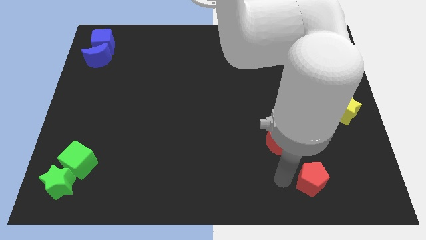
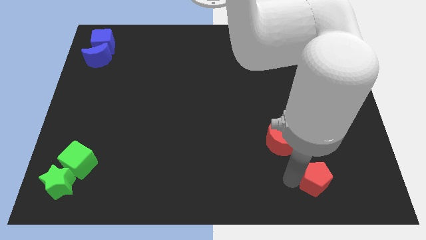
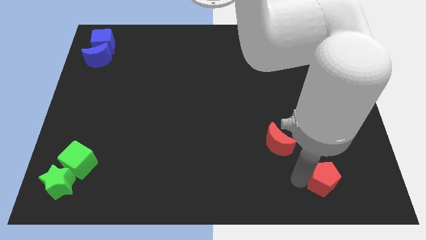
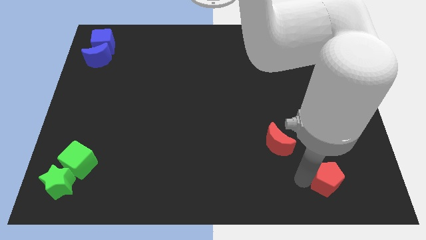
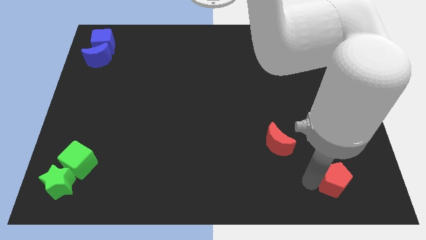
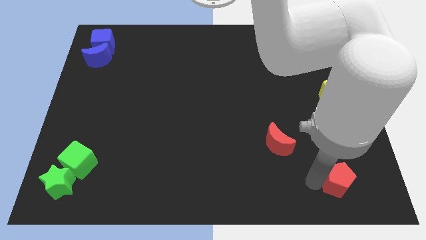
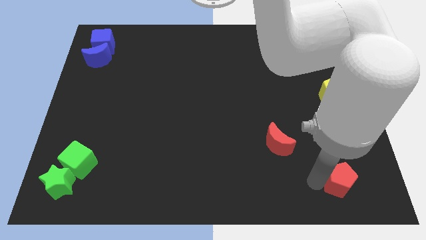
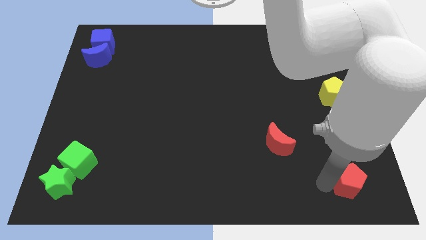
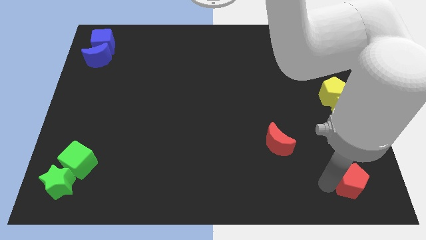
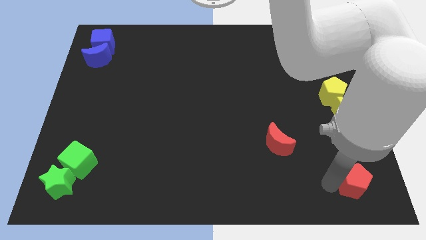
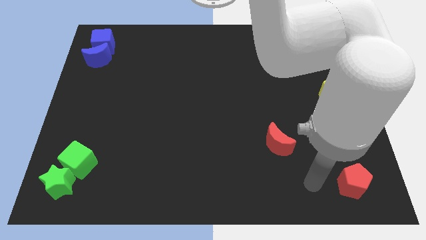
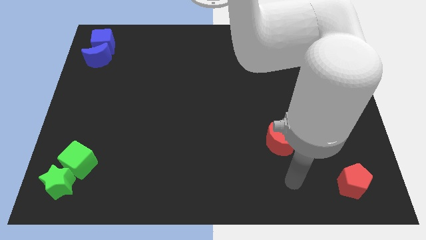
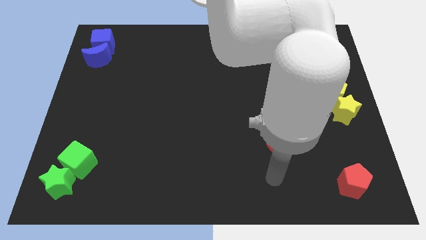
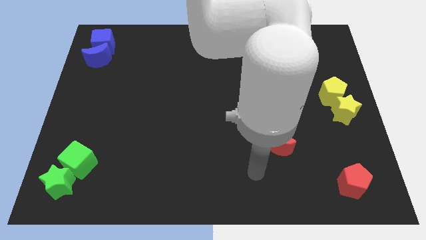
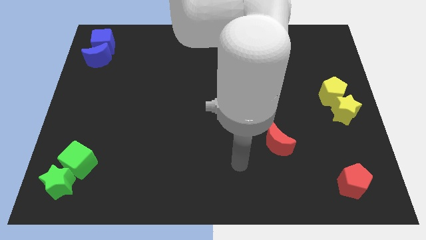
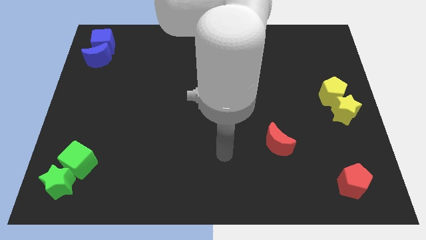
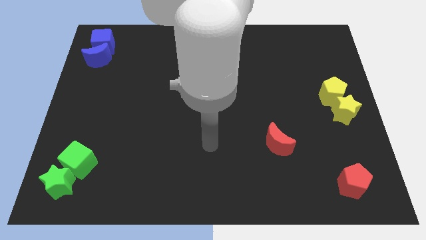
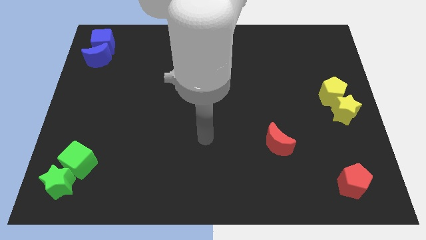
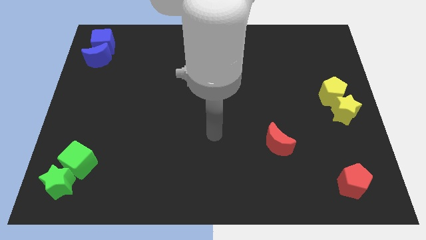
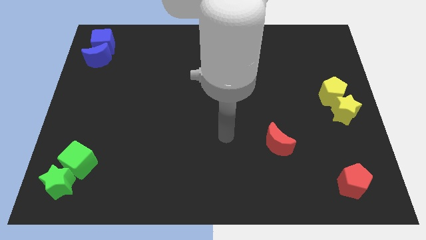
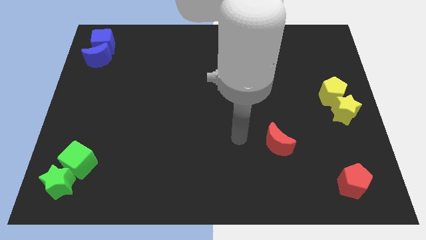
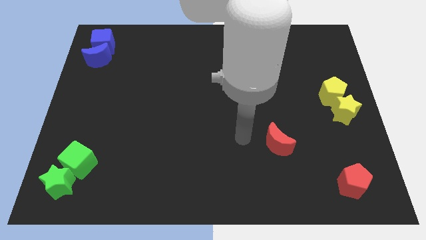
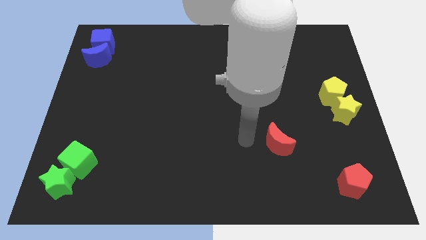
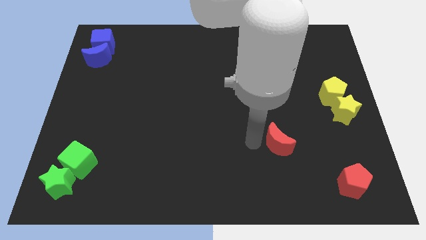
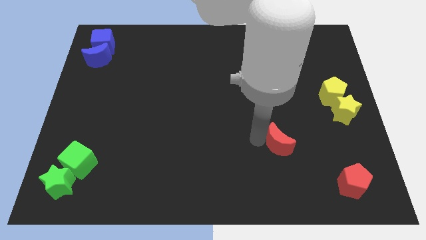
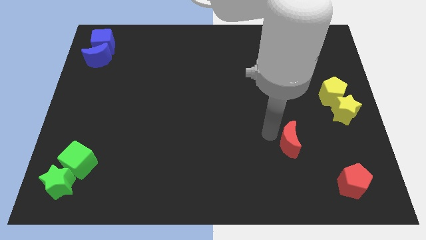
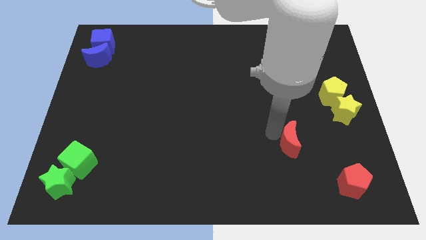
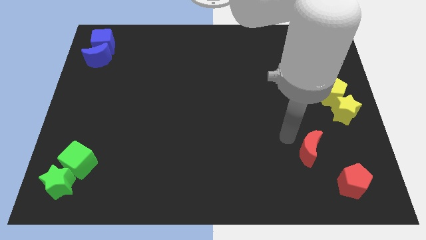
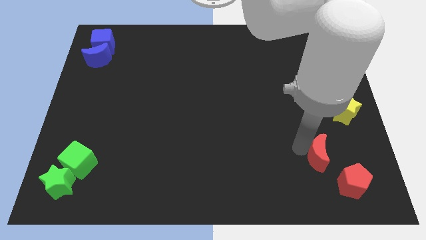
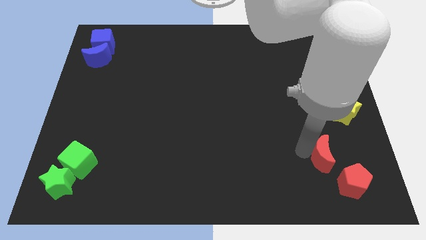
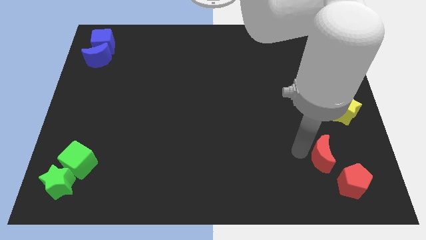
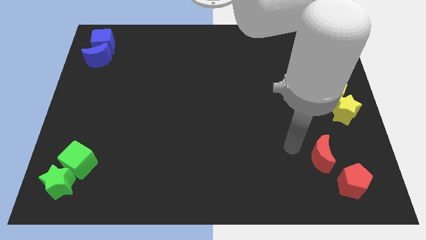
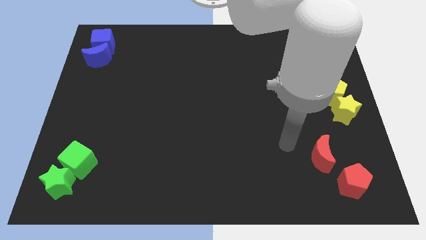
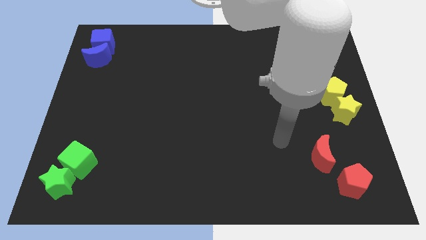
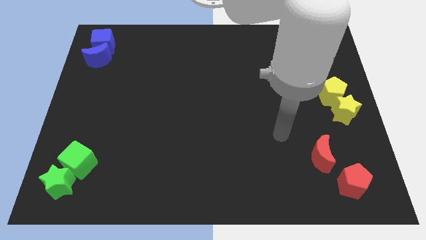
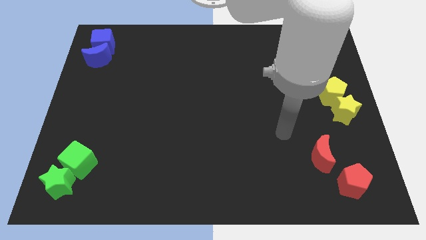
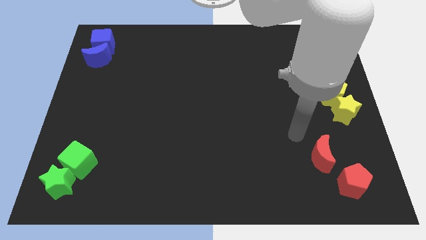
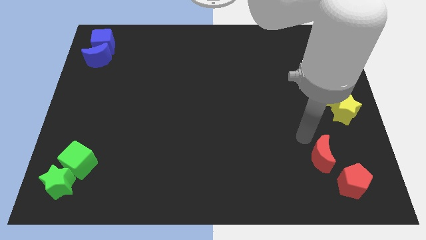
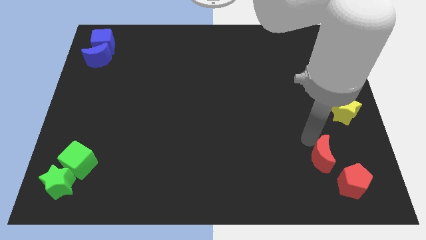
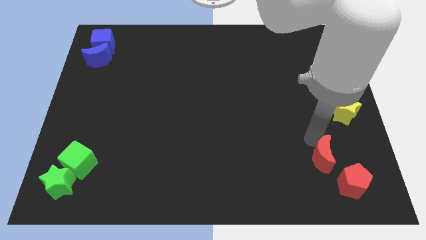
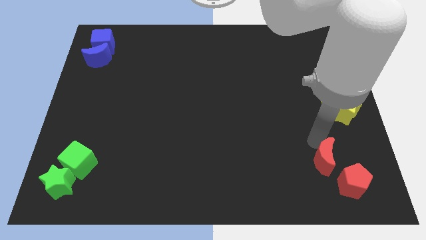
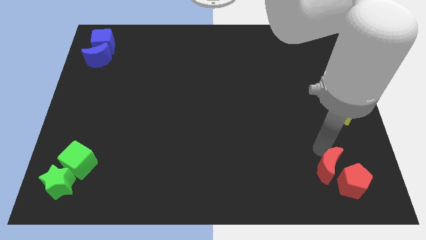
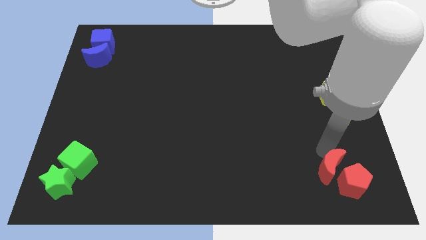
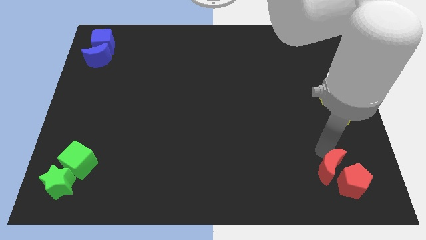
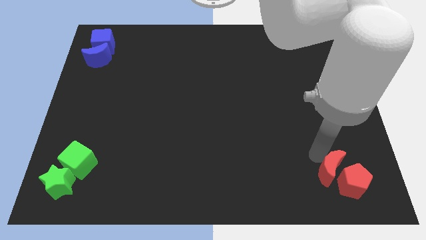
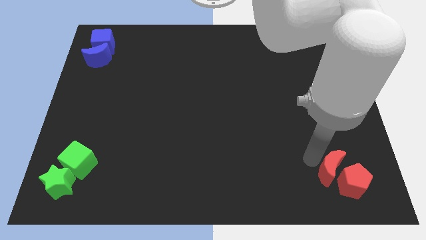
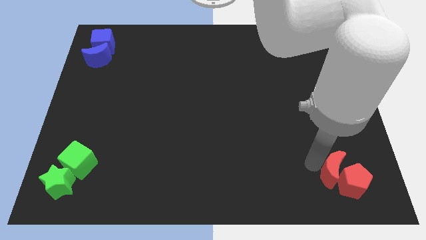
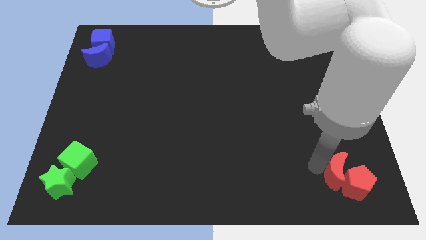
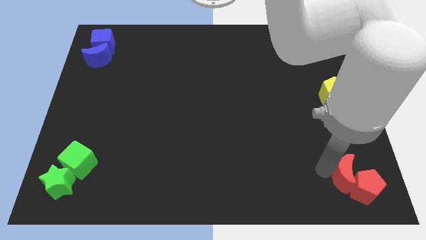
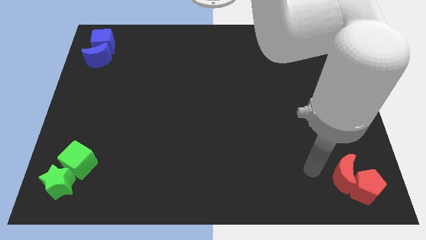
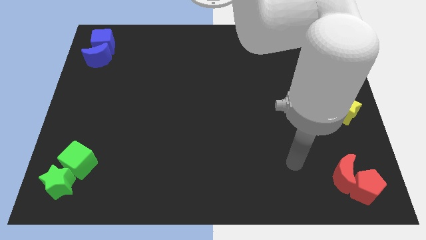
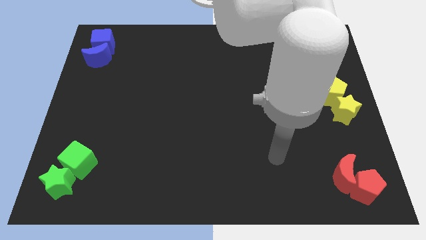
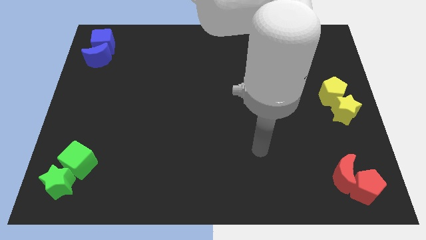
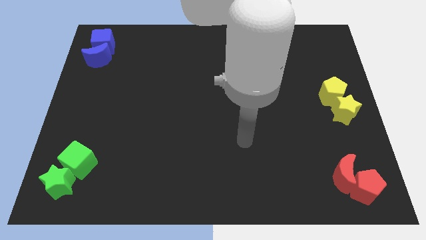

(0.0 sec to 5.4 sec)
move the red crescent to the right bottom along with the red pentagon

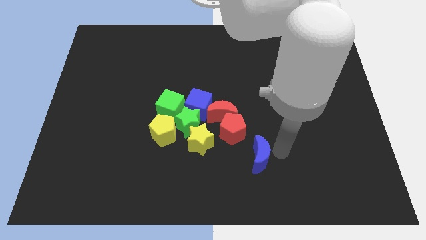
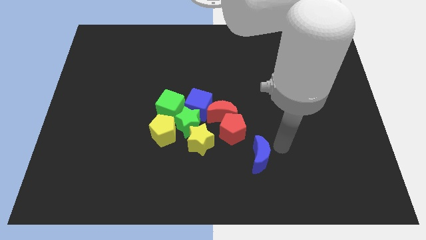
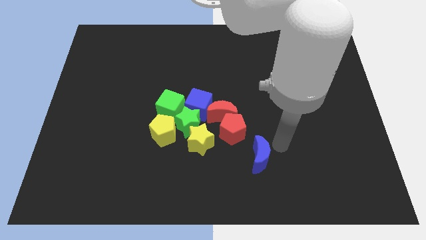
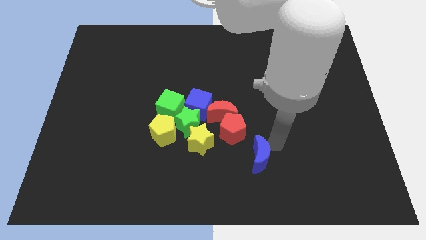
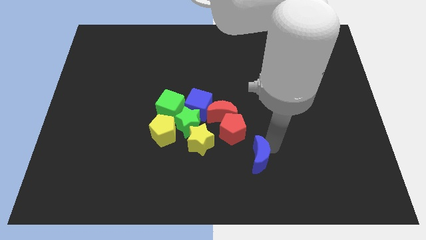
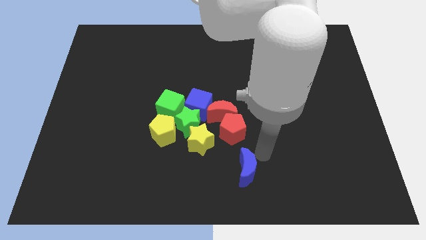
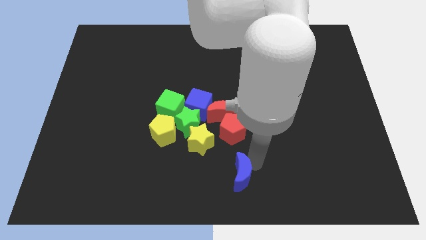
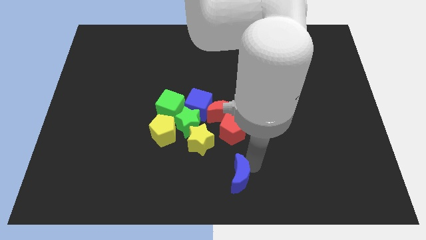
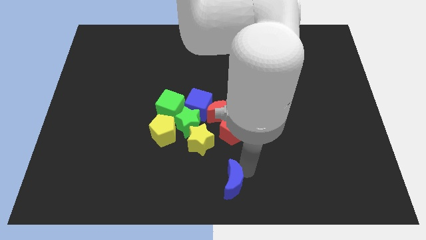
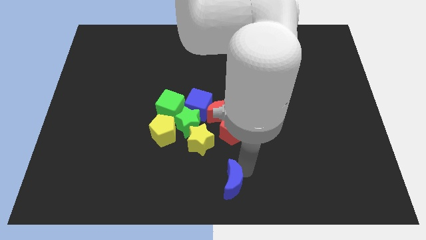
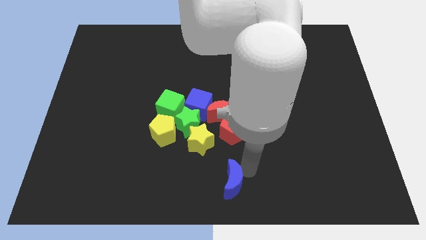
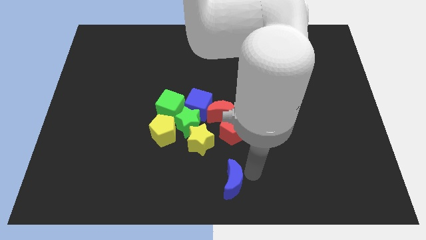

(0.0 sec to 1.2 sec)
place the blue crescent below the red pentagon

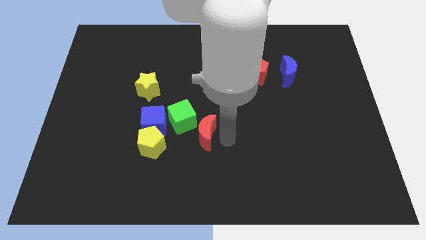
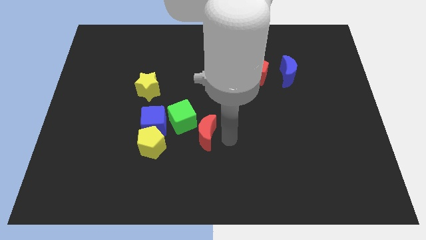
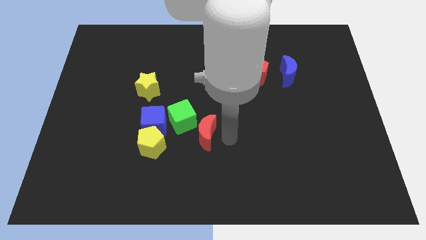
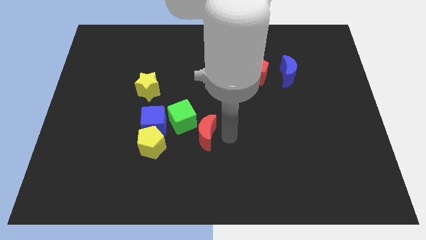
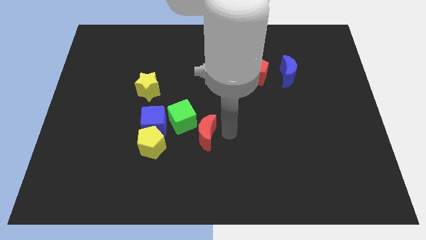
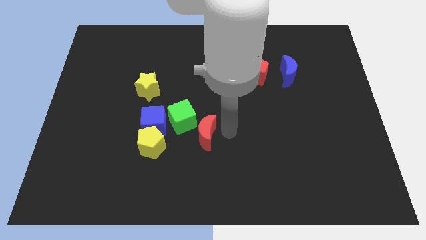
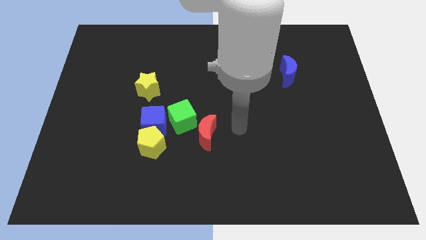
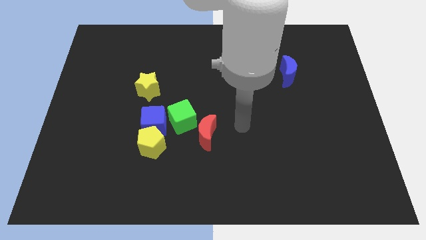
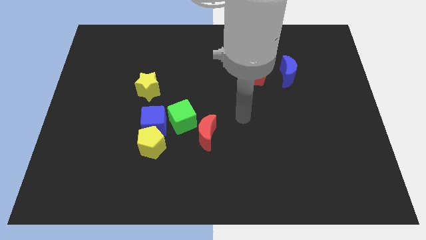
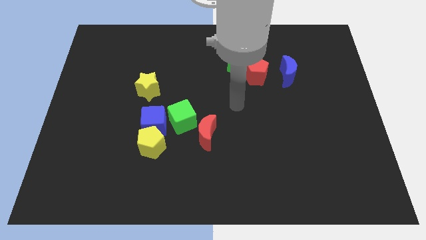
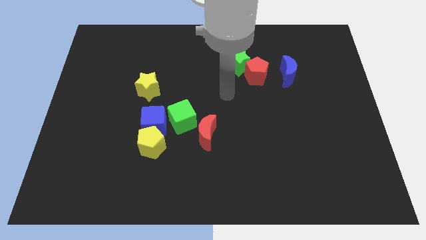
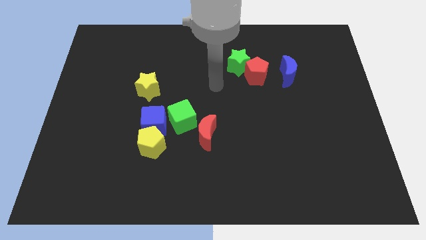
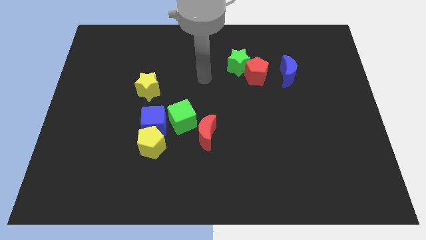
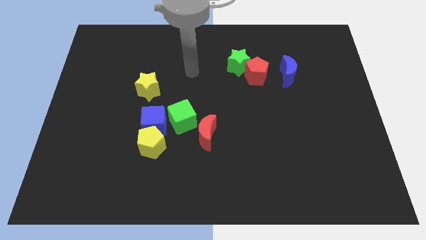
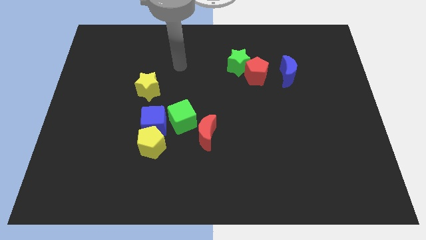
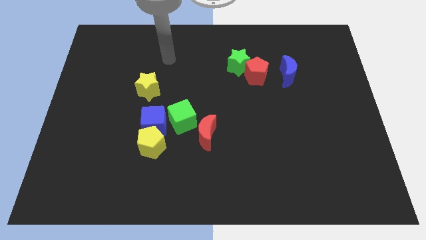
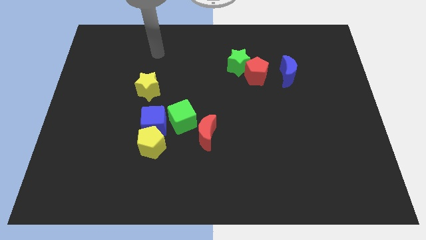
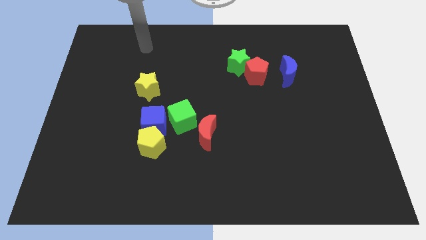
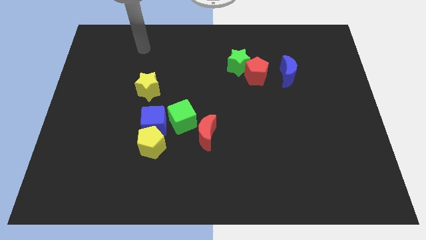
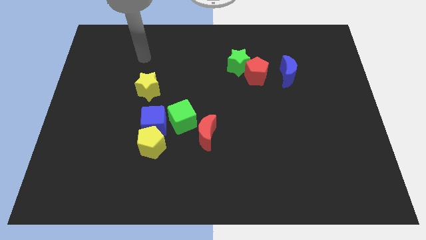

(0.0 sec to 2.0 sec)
move your arm away from the red moon

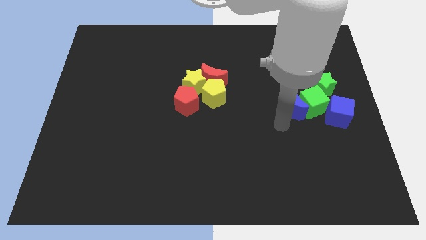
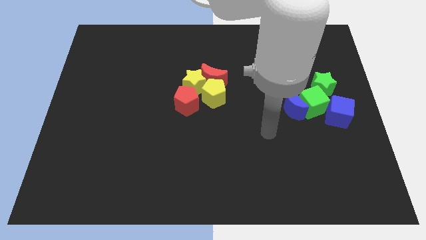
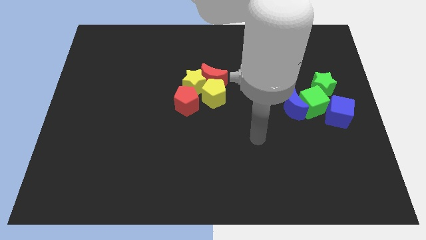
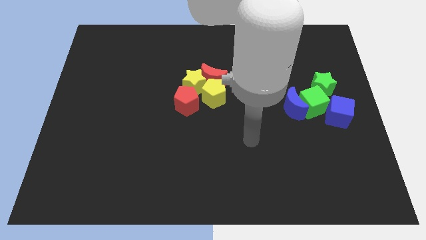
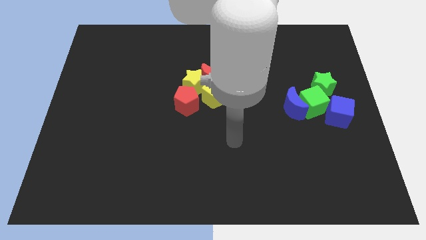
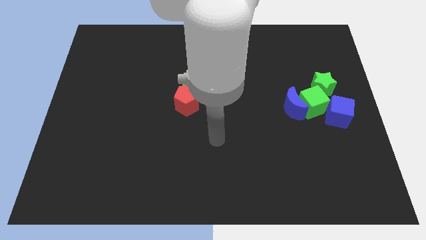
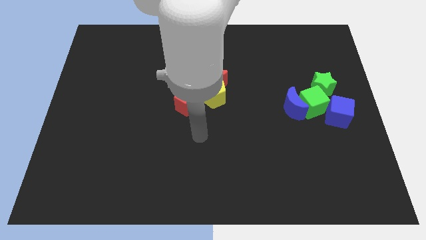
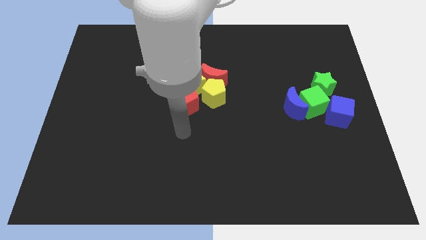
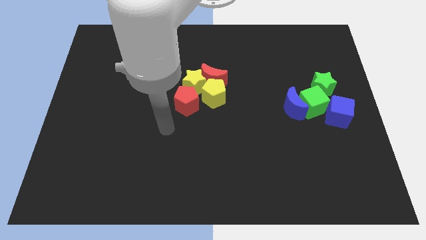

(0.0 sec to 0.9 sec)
move the arm towards the bottom of the red pentagon
